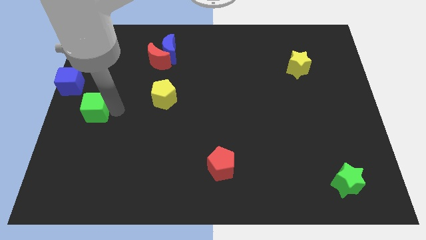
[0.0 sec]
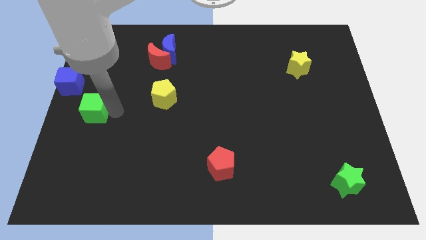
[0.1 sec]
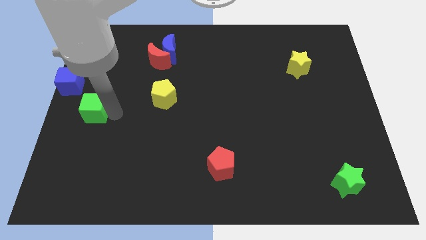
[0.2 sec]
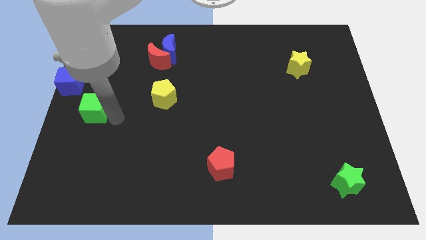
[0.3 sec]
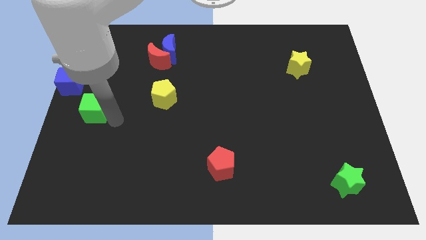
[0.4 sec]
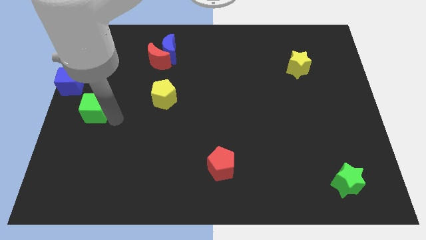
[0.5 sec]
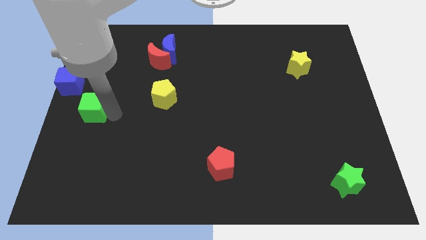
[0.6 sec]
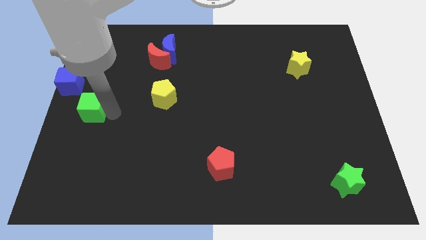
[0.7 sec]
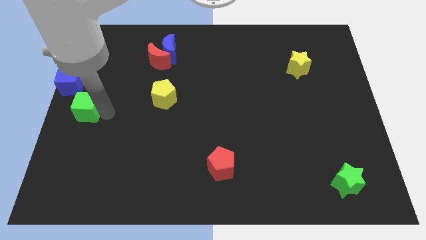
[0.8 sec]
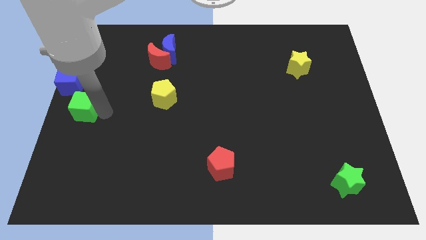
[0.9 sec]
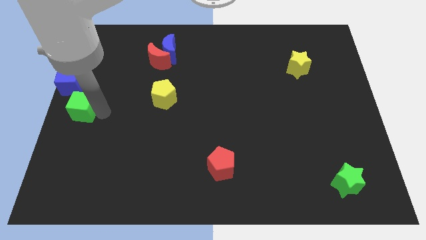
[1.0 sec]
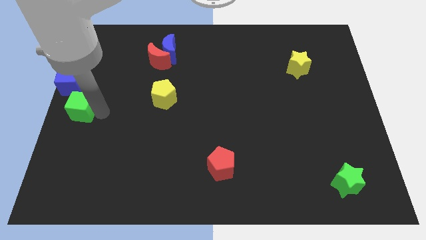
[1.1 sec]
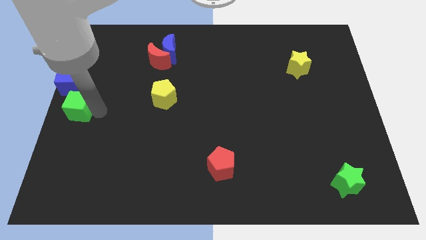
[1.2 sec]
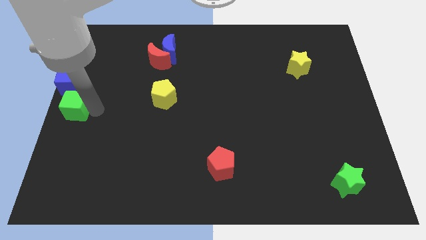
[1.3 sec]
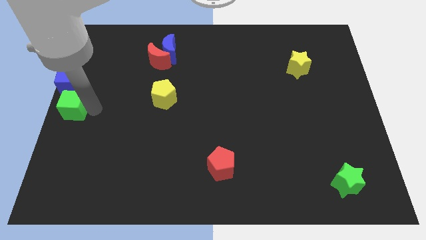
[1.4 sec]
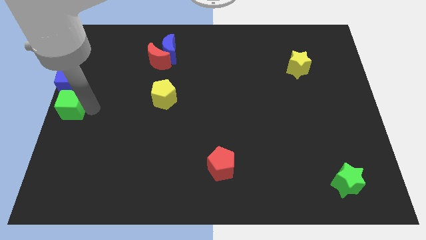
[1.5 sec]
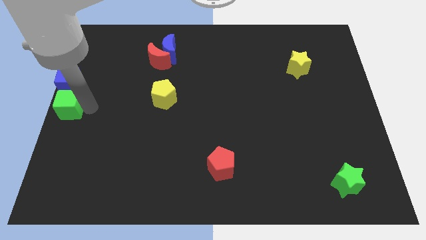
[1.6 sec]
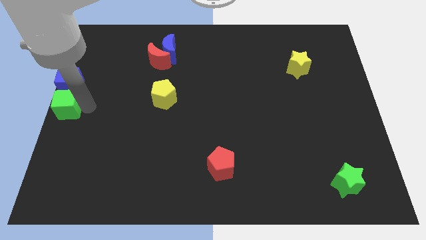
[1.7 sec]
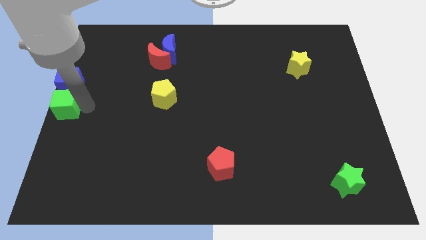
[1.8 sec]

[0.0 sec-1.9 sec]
place green cube below the blue cube

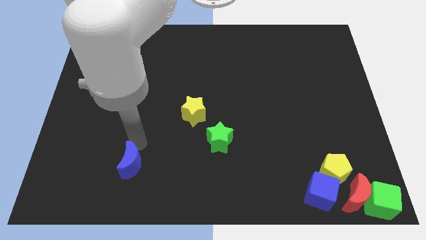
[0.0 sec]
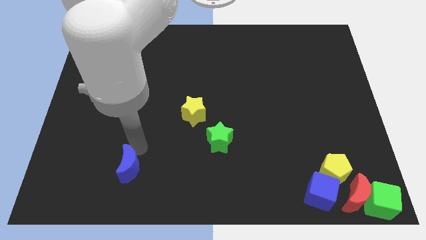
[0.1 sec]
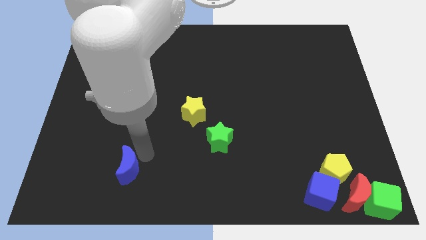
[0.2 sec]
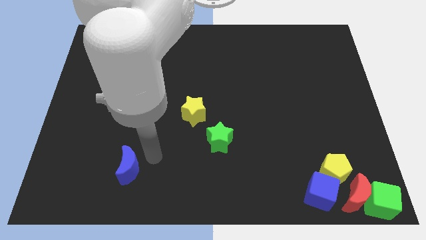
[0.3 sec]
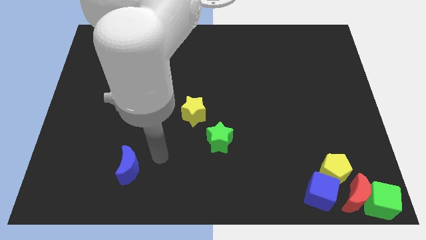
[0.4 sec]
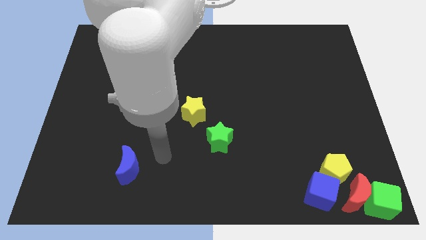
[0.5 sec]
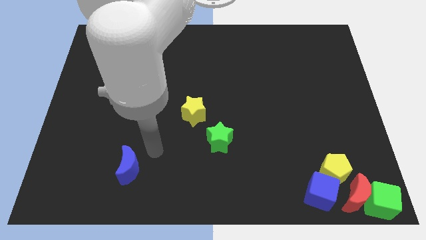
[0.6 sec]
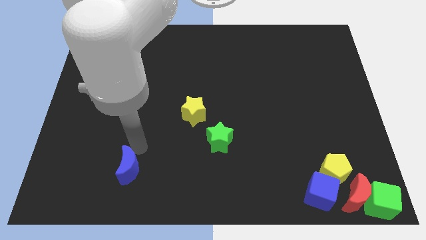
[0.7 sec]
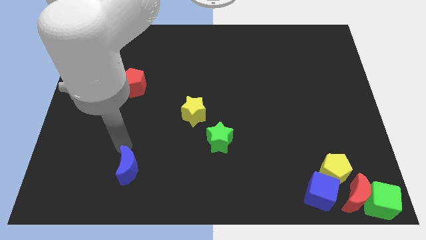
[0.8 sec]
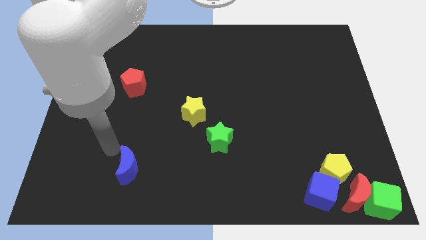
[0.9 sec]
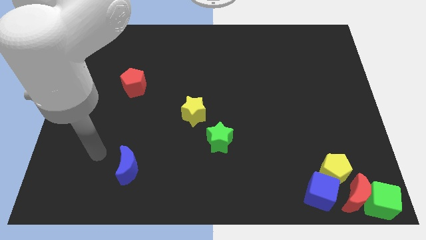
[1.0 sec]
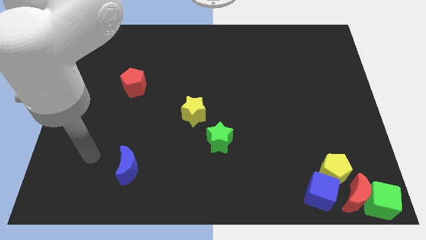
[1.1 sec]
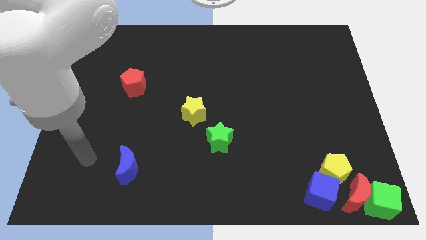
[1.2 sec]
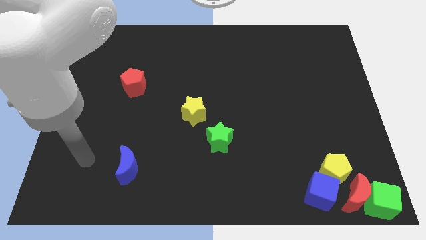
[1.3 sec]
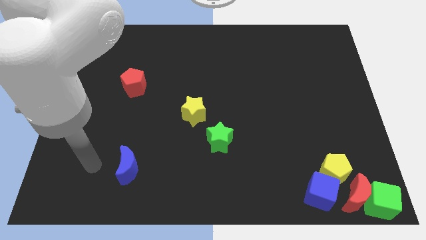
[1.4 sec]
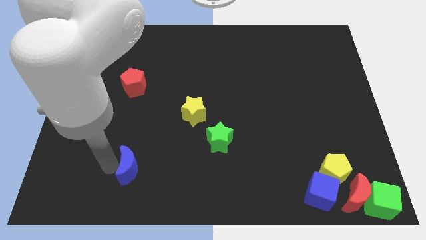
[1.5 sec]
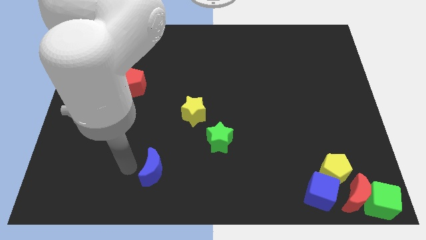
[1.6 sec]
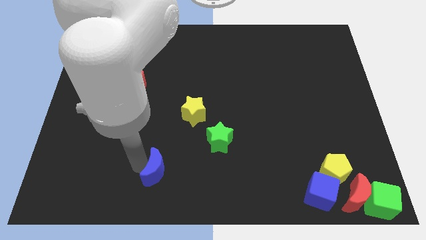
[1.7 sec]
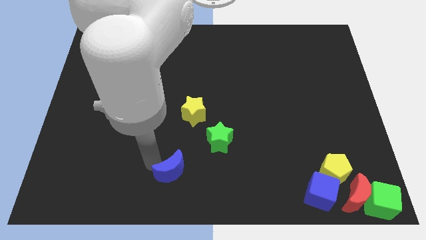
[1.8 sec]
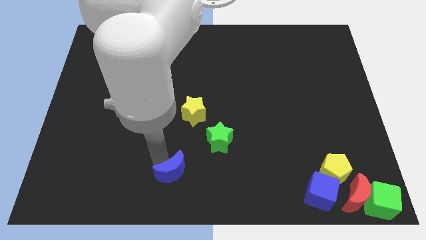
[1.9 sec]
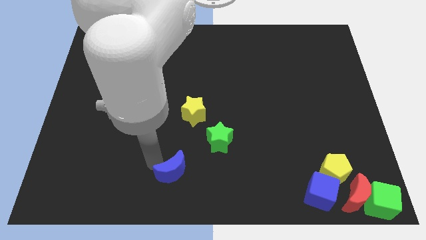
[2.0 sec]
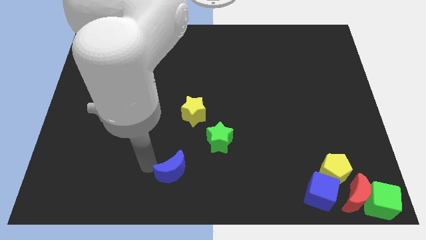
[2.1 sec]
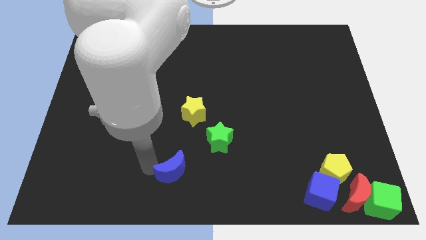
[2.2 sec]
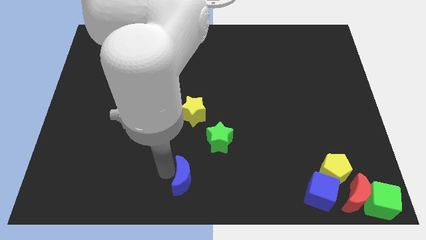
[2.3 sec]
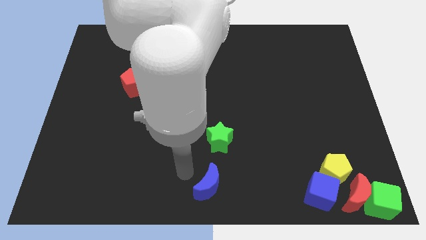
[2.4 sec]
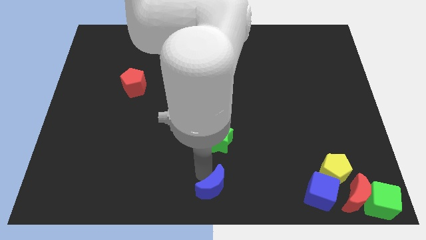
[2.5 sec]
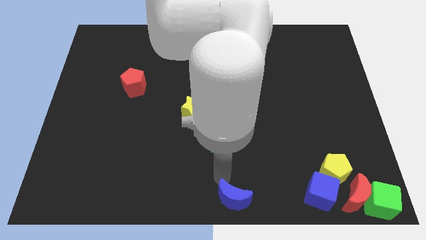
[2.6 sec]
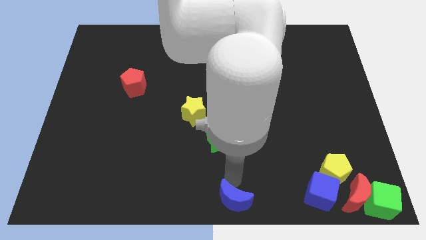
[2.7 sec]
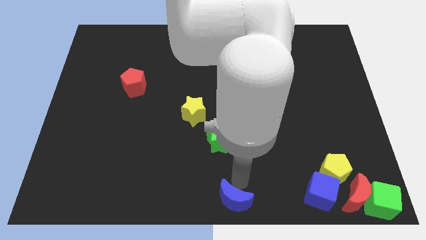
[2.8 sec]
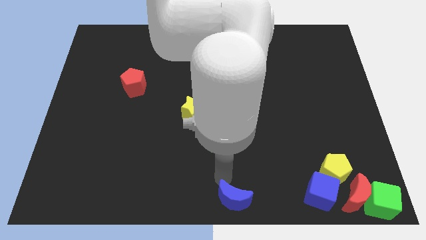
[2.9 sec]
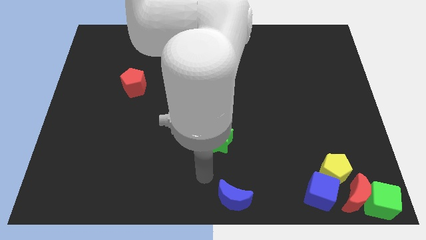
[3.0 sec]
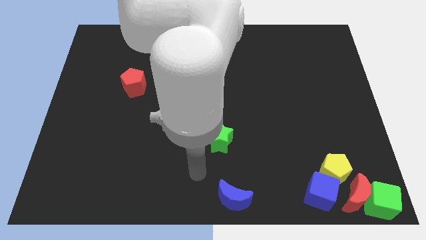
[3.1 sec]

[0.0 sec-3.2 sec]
push the blue moon towards the bottom center of the board

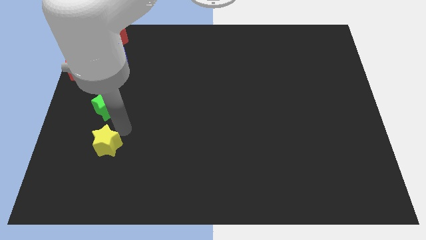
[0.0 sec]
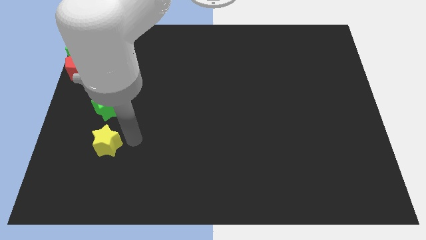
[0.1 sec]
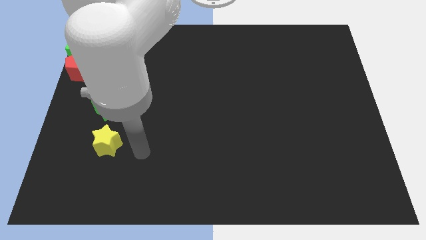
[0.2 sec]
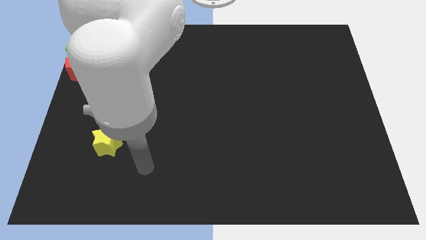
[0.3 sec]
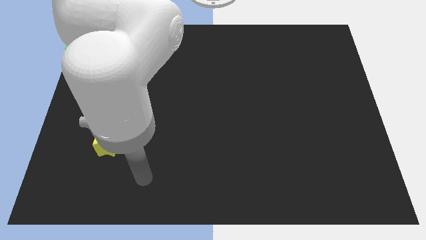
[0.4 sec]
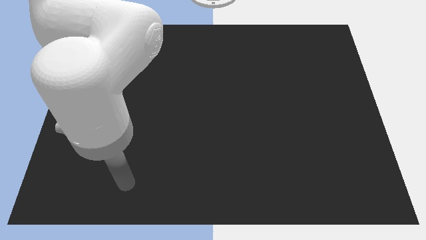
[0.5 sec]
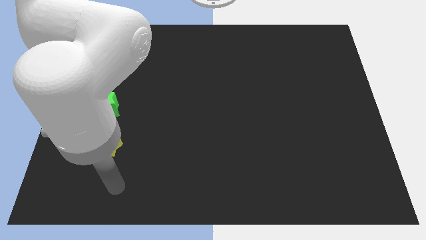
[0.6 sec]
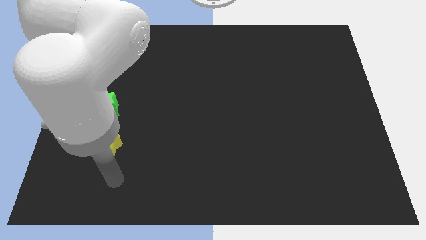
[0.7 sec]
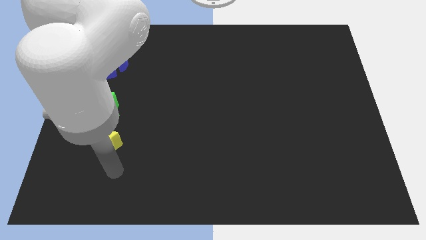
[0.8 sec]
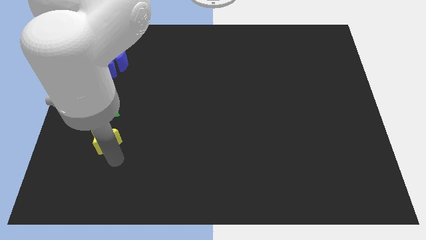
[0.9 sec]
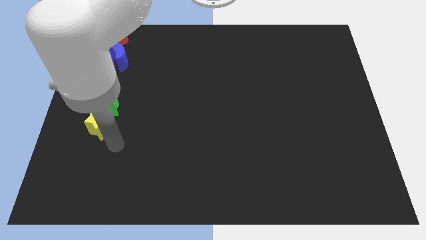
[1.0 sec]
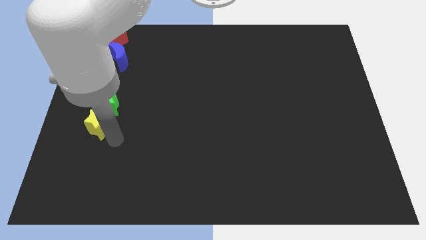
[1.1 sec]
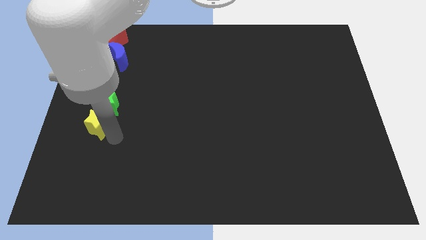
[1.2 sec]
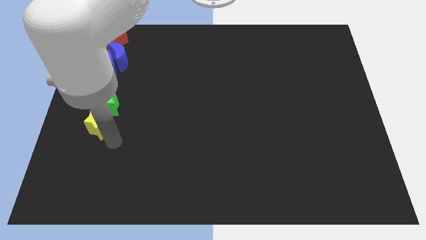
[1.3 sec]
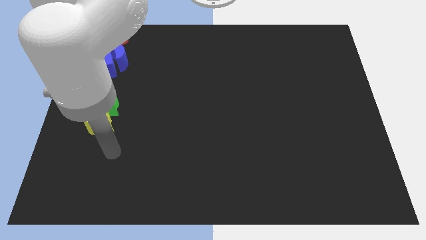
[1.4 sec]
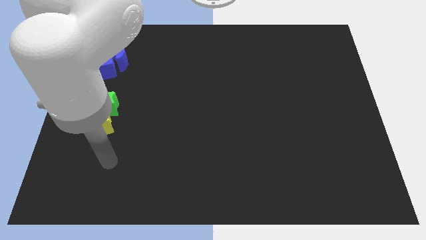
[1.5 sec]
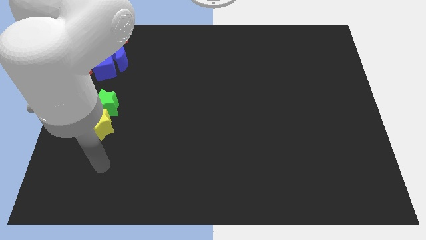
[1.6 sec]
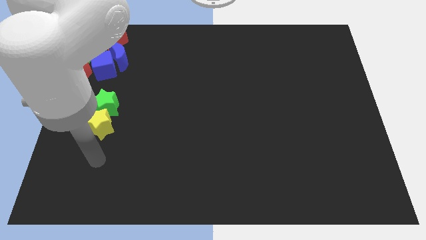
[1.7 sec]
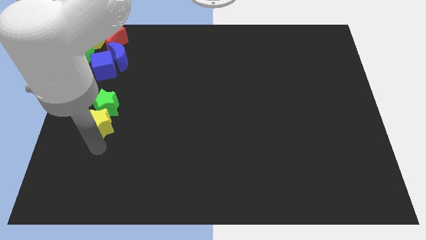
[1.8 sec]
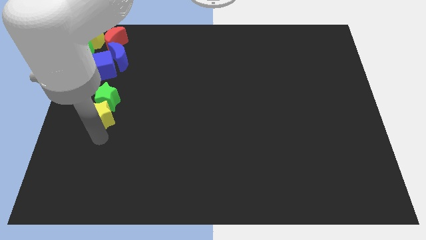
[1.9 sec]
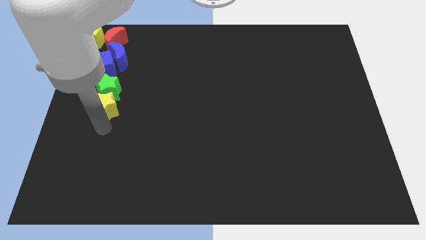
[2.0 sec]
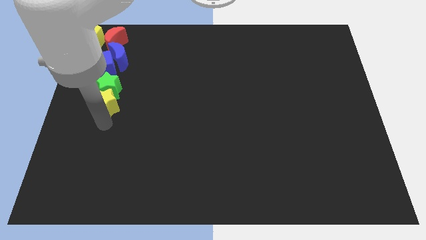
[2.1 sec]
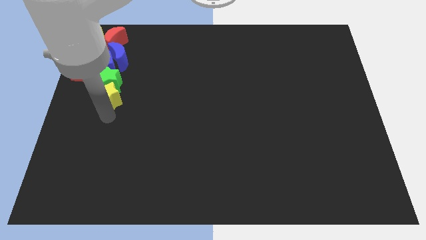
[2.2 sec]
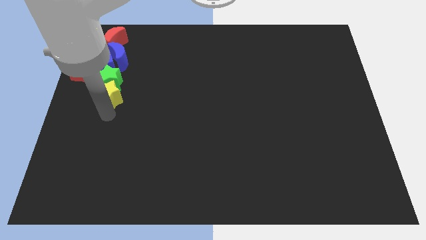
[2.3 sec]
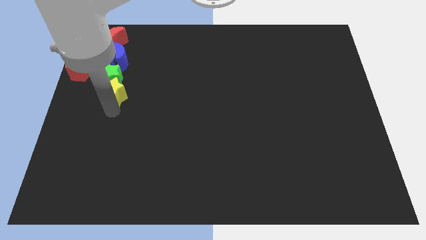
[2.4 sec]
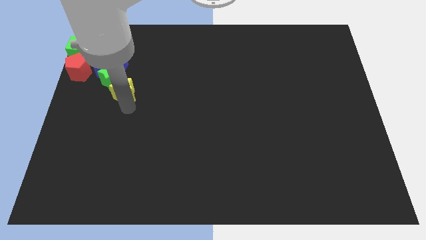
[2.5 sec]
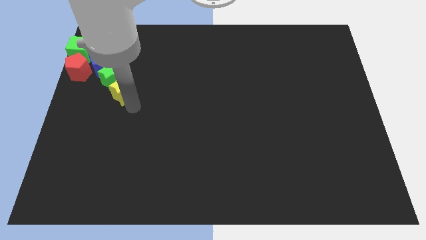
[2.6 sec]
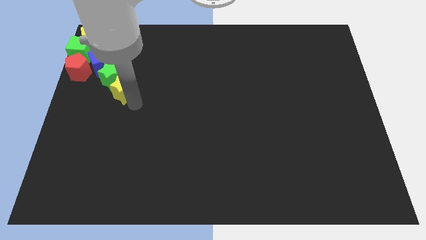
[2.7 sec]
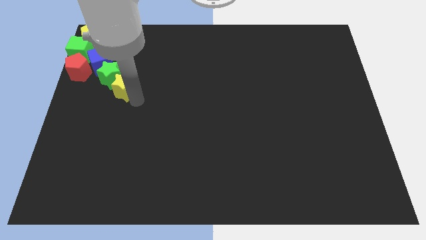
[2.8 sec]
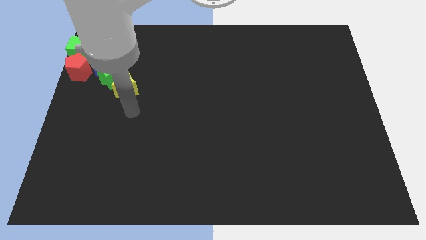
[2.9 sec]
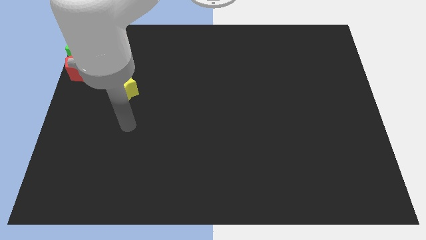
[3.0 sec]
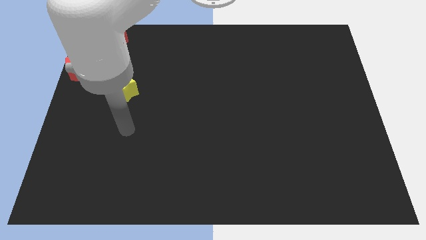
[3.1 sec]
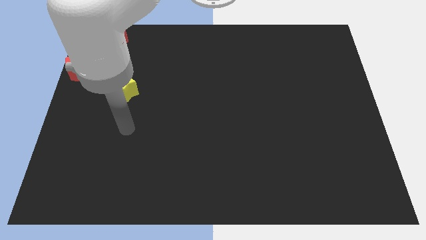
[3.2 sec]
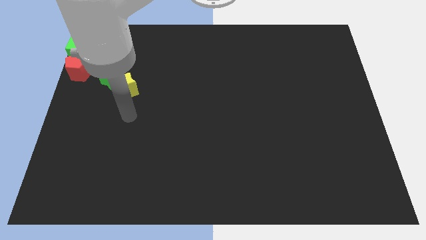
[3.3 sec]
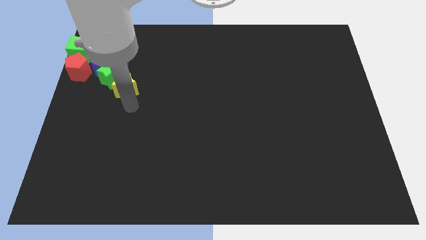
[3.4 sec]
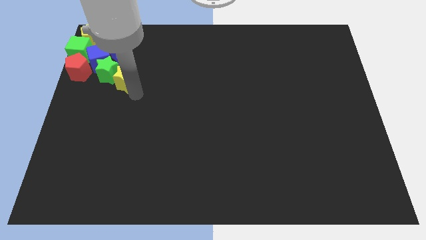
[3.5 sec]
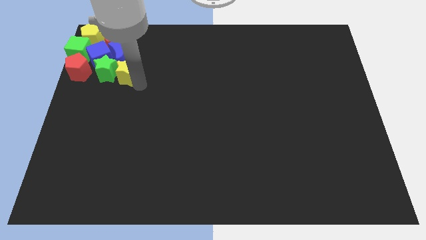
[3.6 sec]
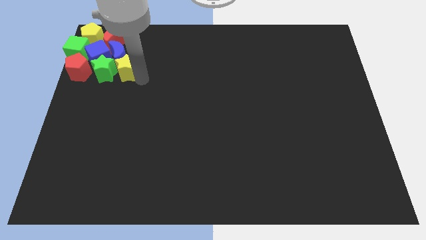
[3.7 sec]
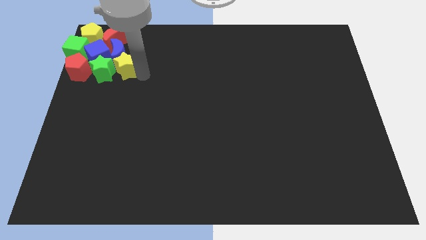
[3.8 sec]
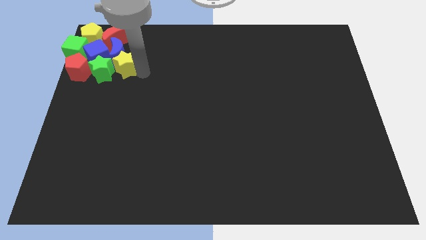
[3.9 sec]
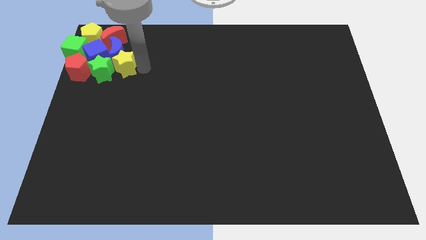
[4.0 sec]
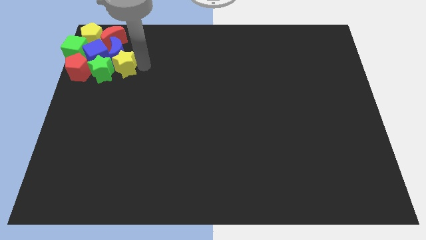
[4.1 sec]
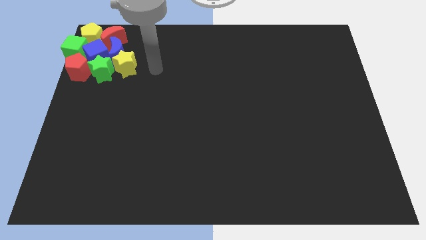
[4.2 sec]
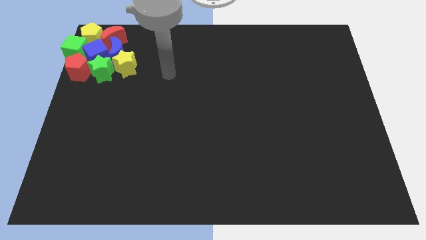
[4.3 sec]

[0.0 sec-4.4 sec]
move stars to the group of blocks
